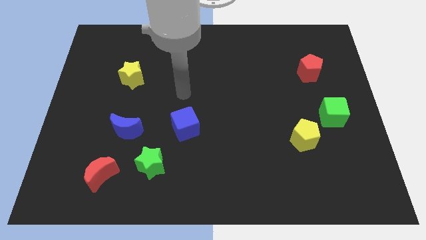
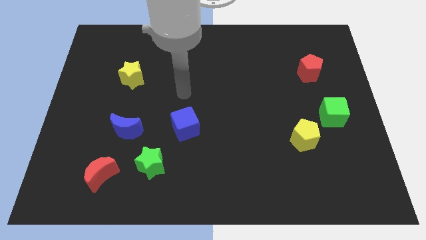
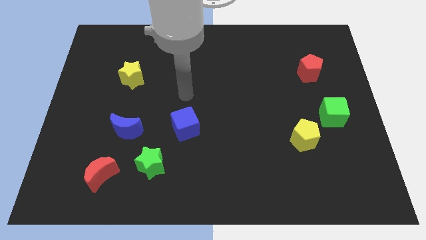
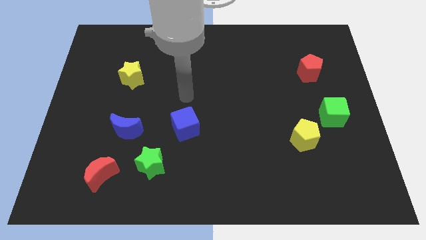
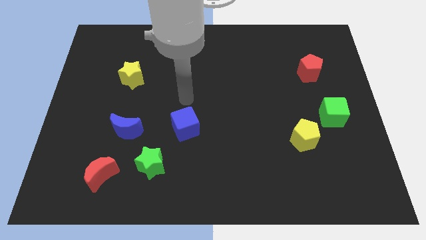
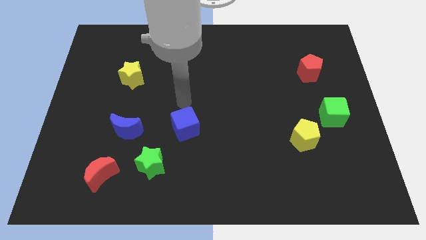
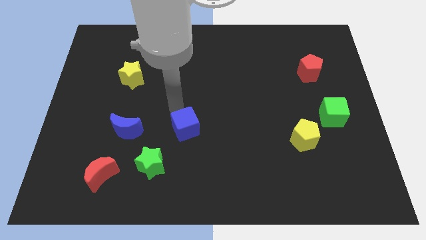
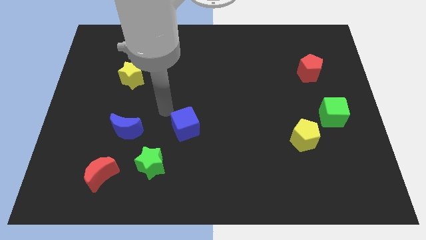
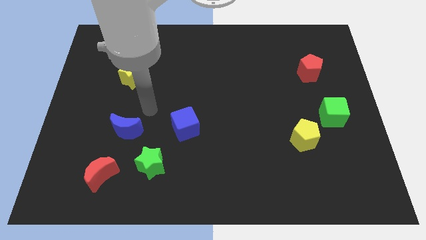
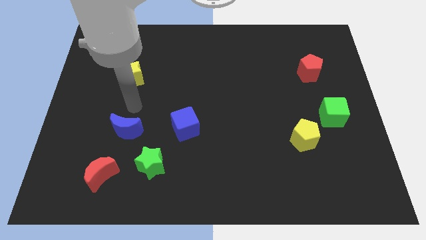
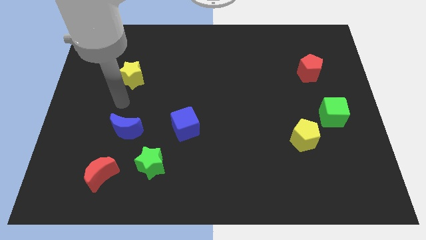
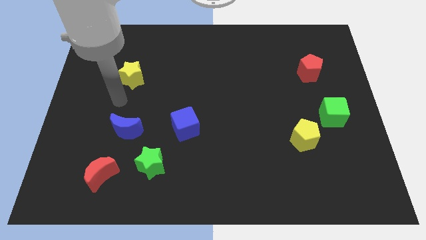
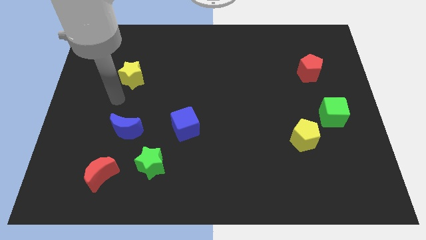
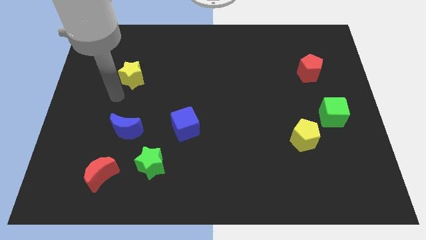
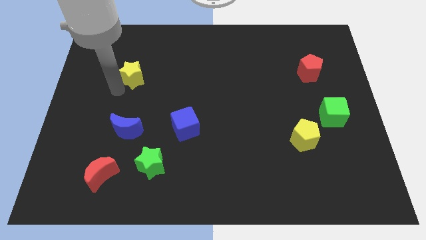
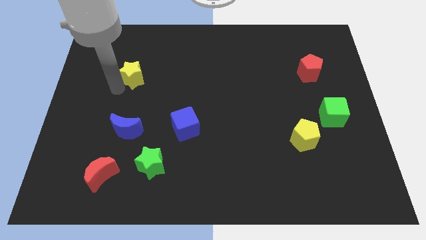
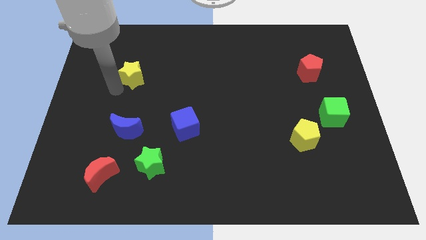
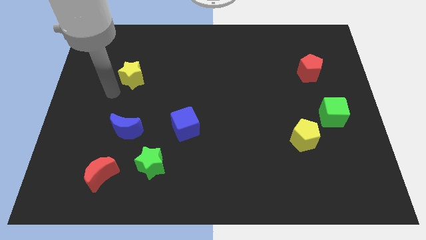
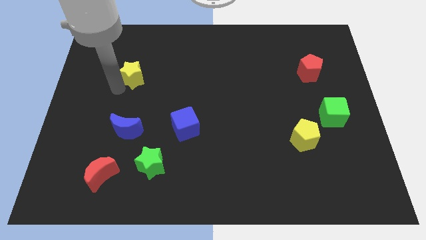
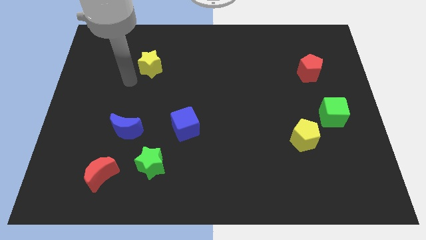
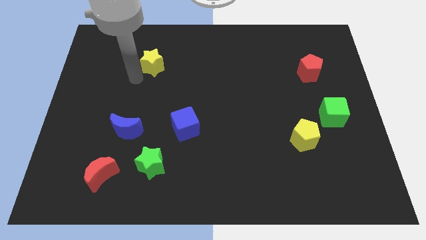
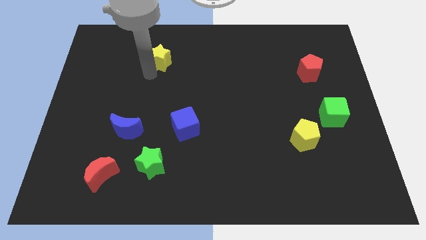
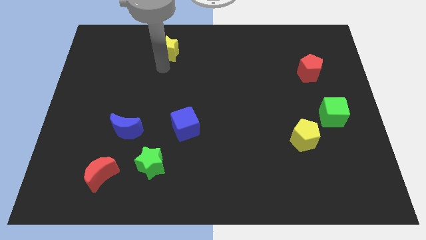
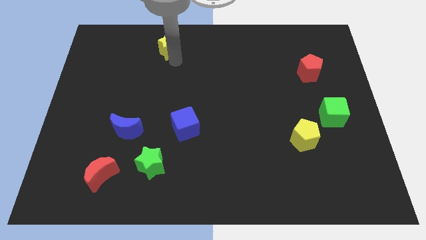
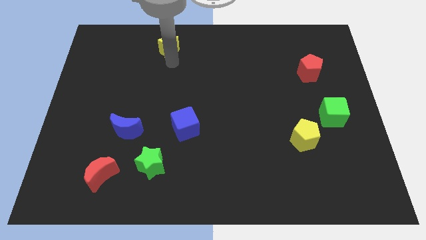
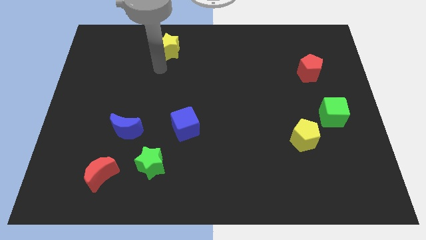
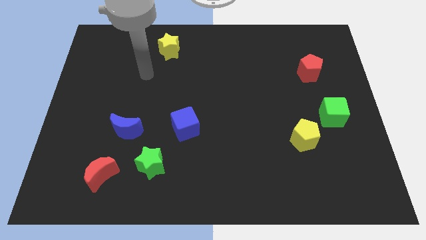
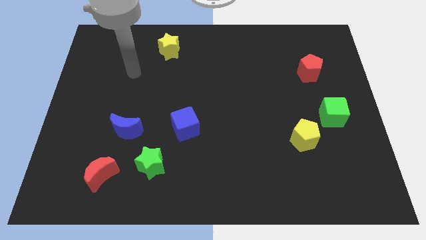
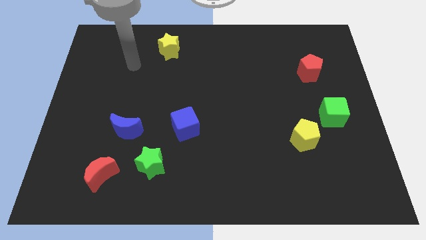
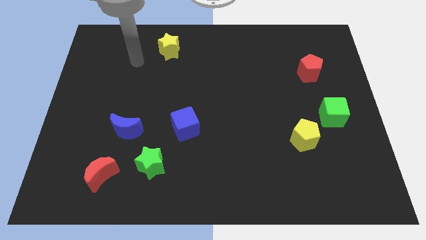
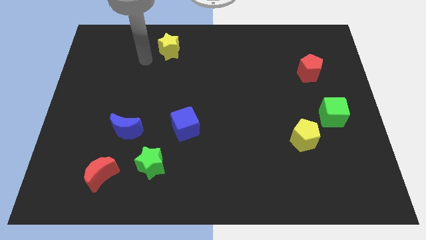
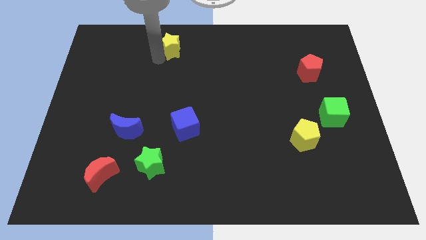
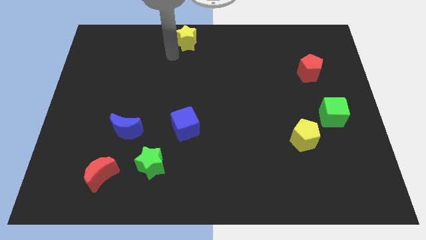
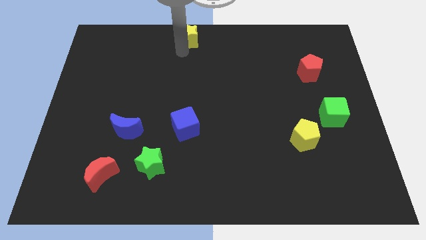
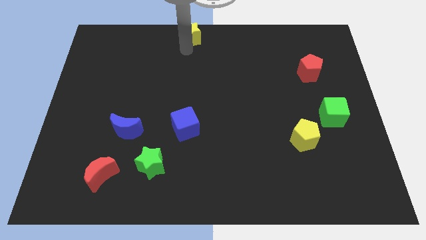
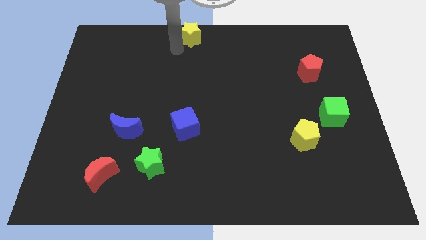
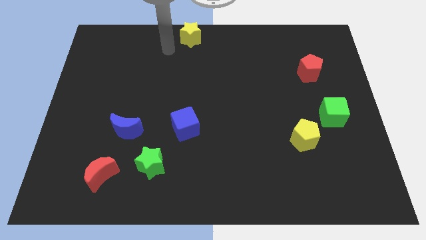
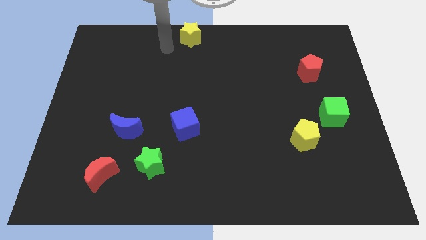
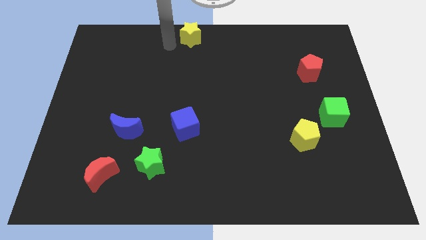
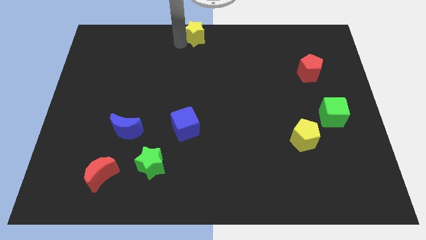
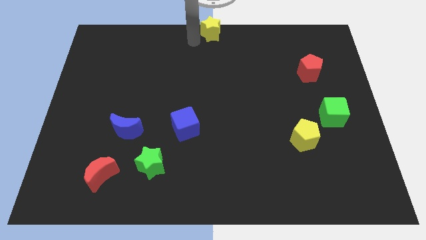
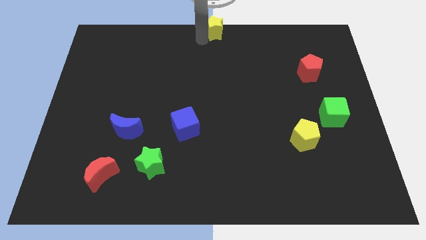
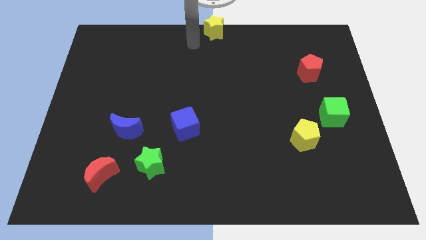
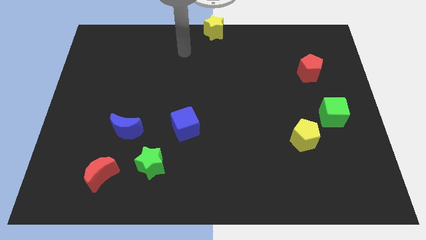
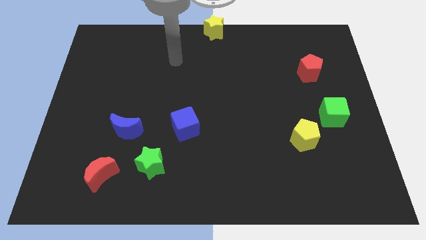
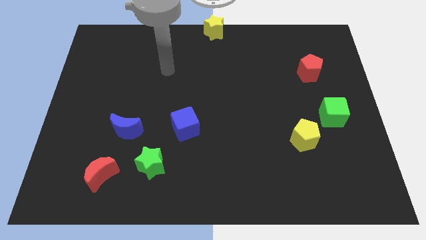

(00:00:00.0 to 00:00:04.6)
push the yellow star to the top center of the board

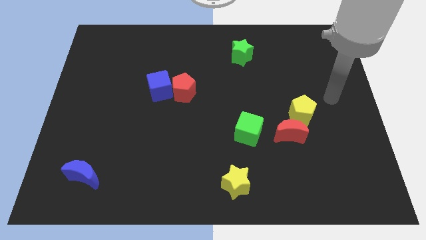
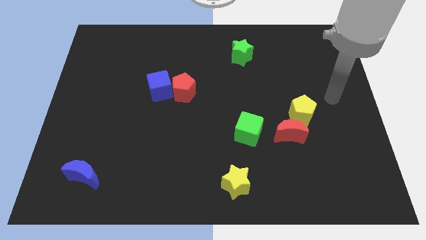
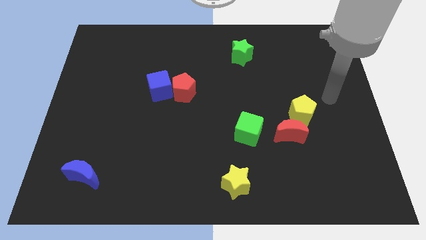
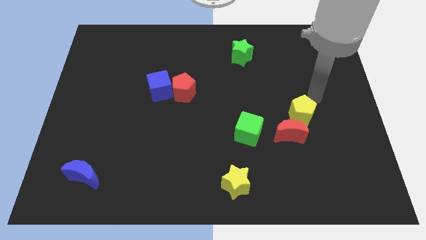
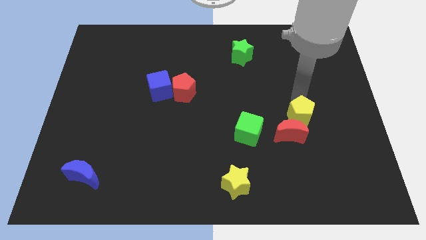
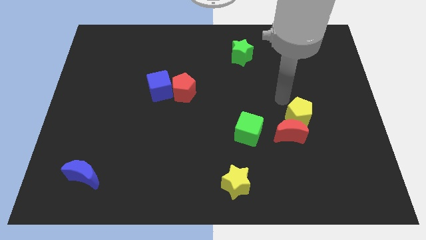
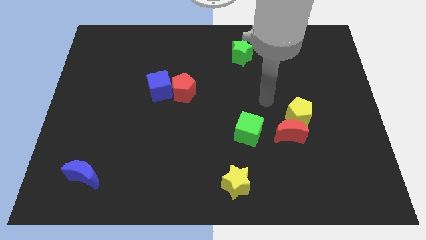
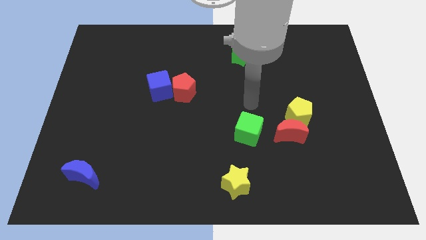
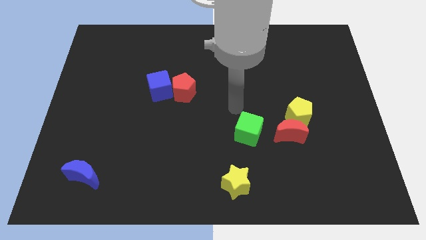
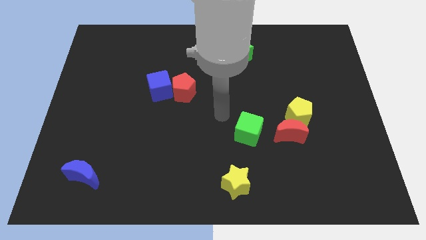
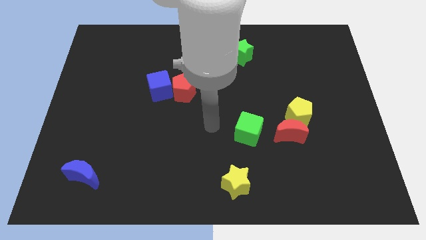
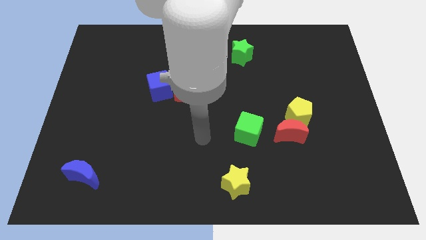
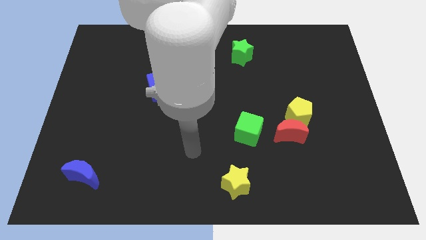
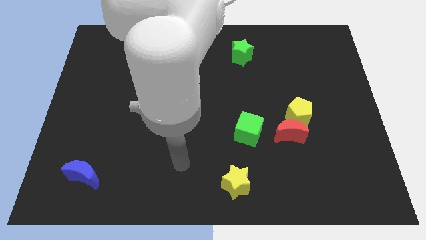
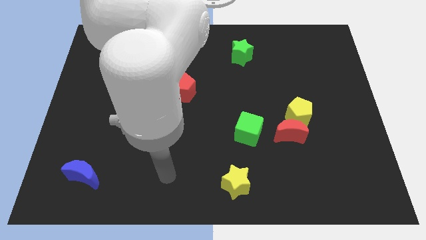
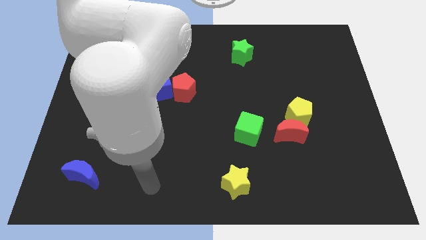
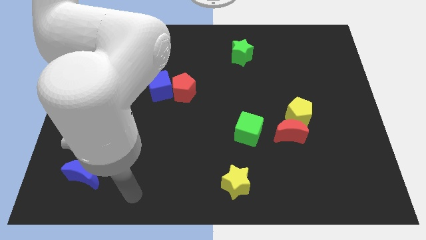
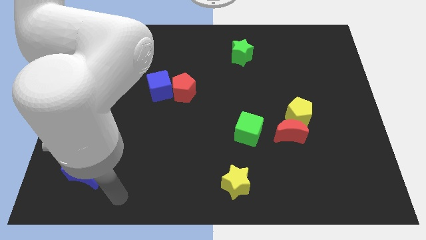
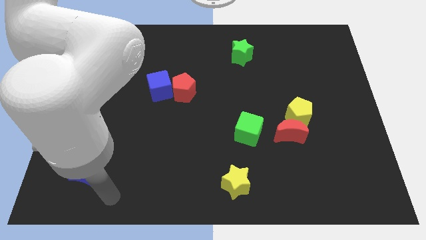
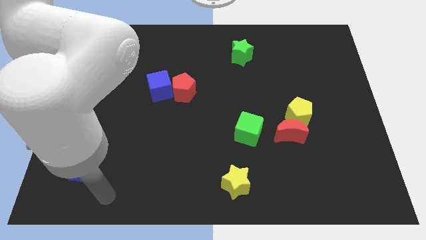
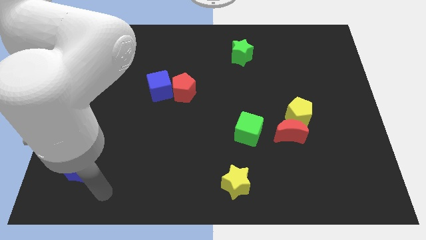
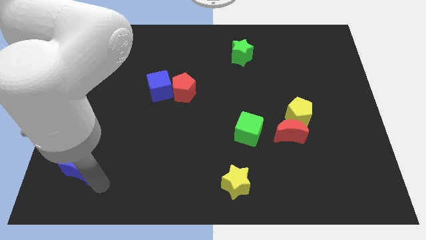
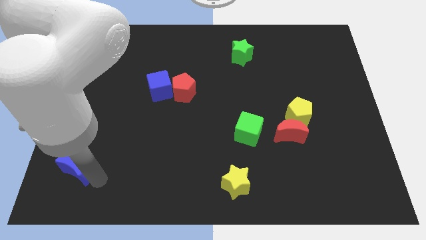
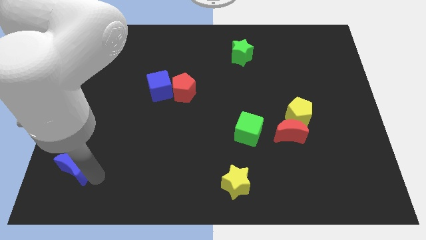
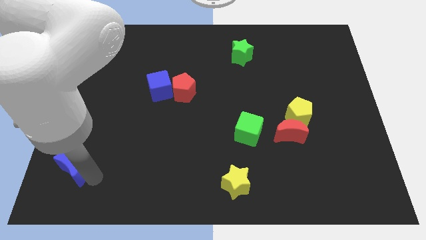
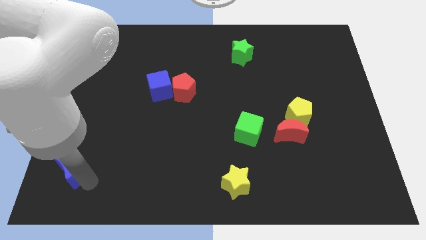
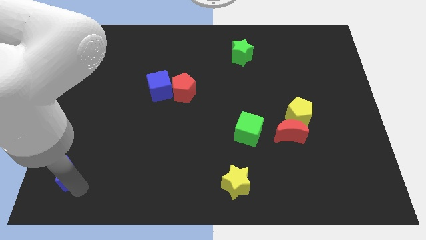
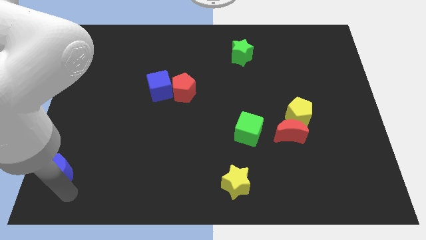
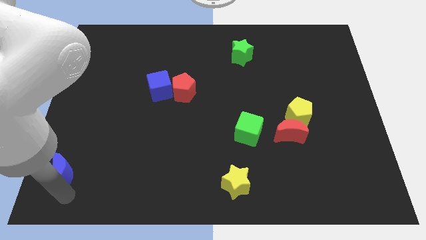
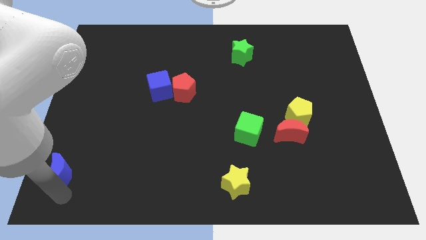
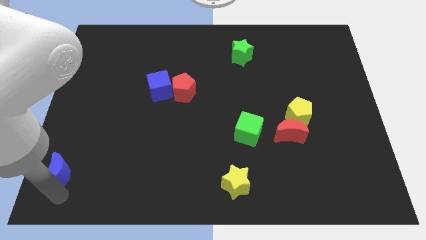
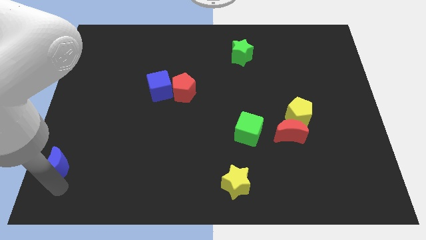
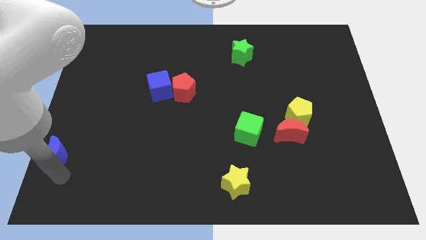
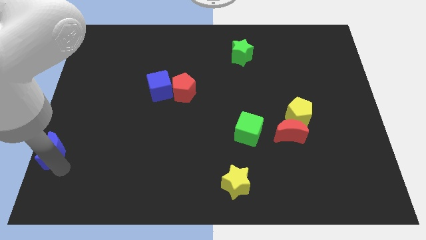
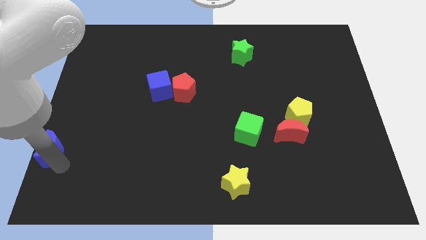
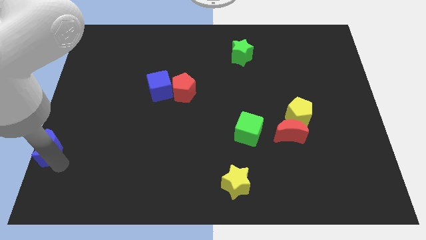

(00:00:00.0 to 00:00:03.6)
move the blue moon to the bottom left of the board

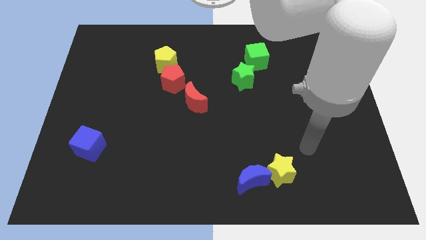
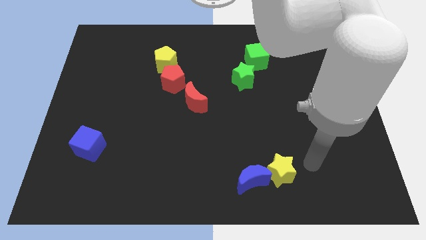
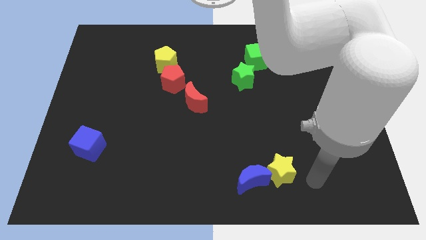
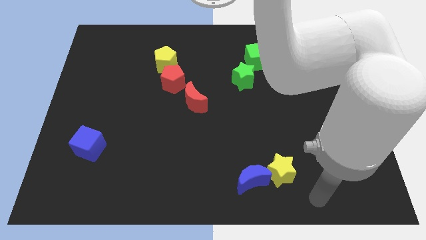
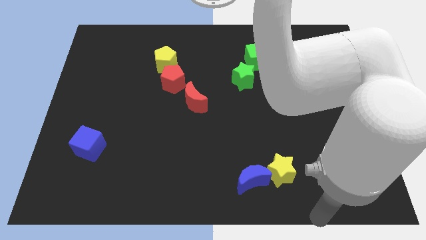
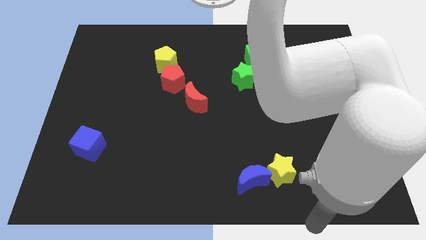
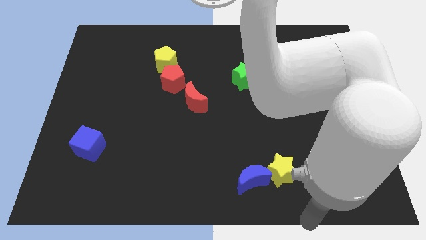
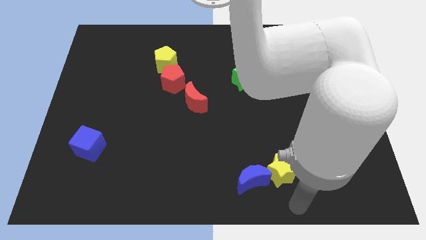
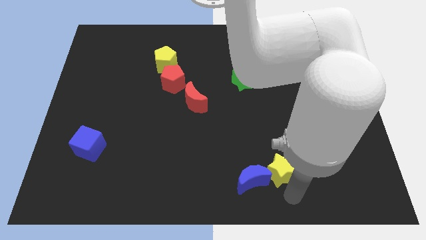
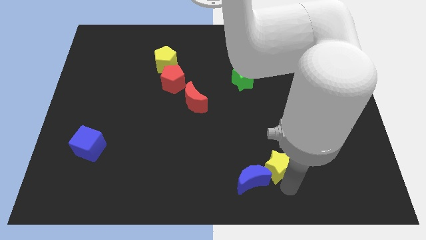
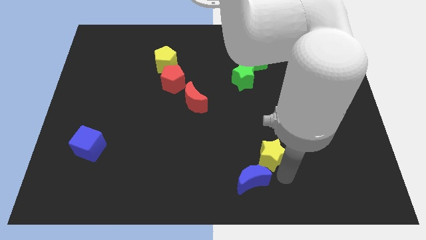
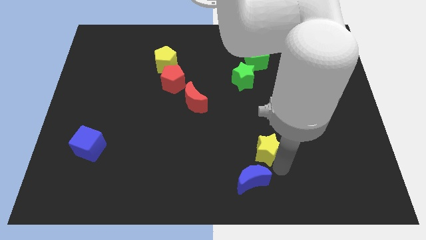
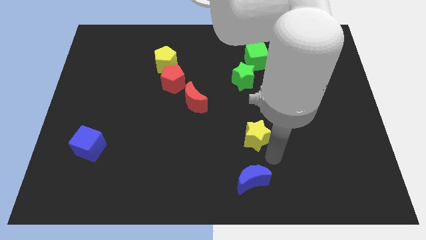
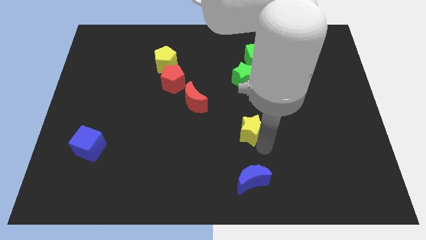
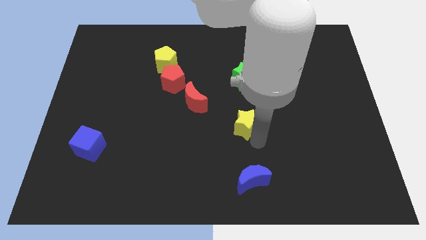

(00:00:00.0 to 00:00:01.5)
move the yellow star to the top side of the blue moon
